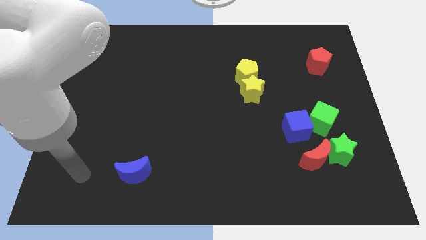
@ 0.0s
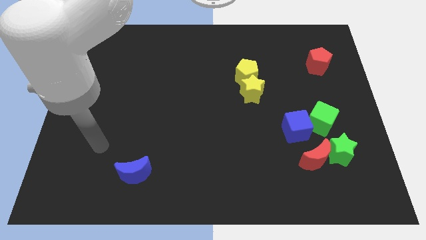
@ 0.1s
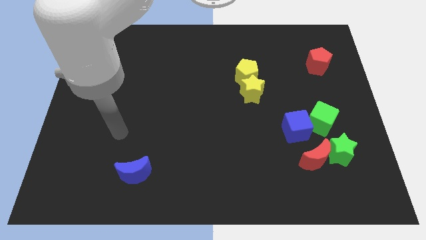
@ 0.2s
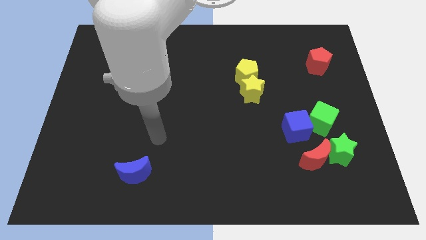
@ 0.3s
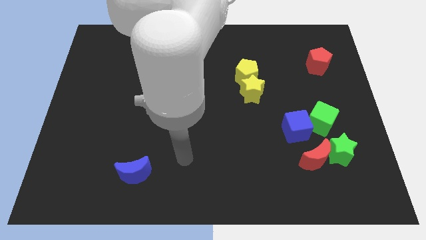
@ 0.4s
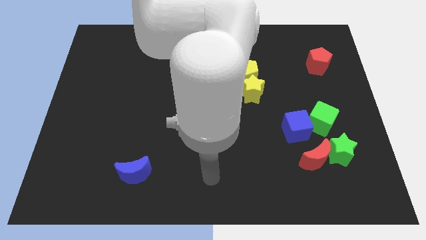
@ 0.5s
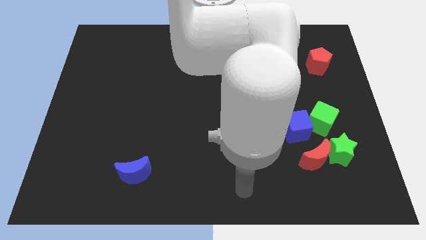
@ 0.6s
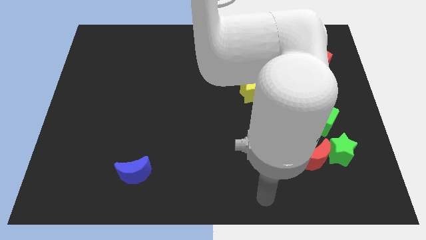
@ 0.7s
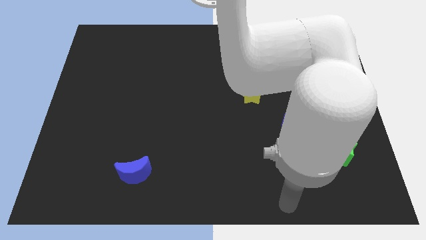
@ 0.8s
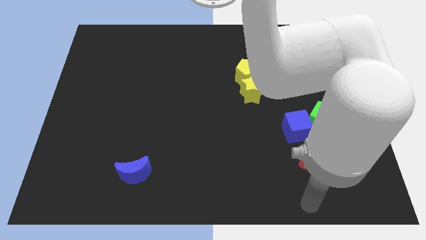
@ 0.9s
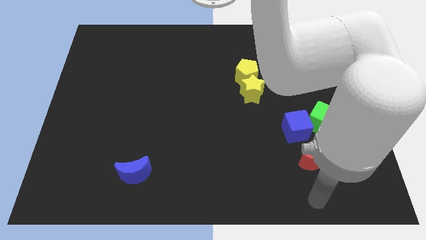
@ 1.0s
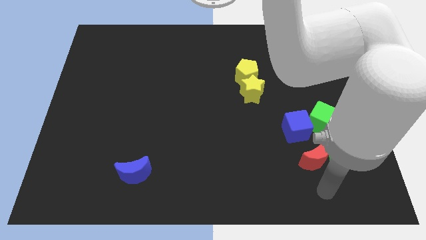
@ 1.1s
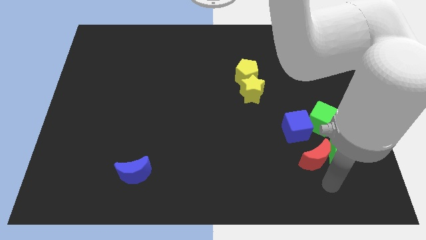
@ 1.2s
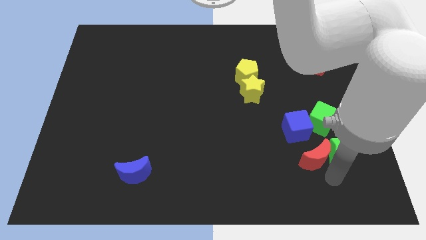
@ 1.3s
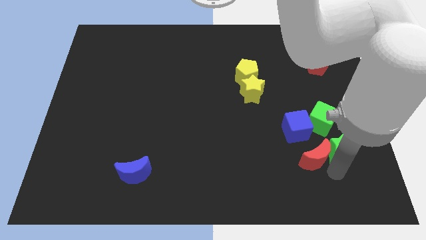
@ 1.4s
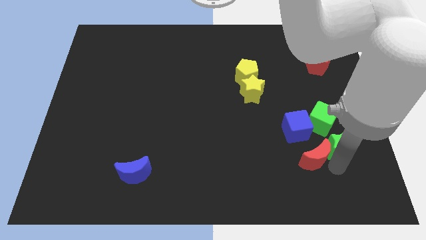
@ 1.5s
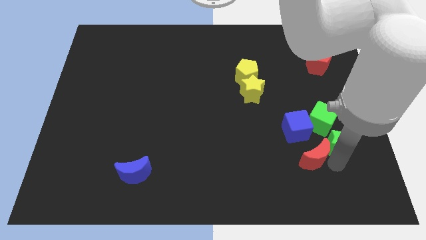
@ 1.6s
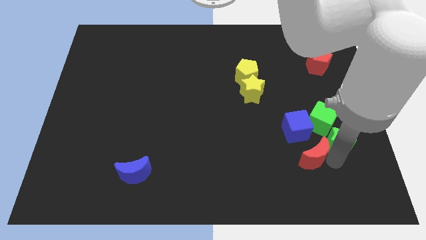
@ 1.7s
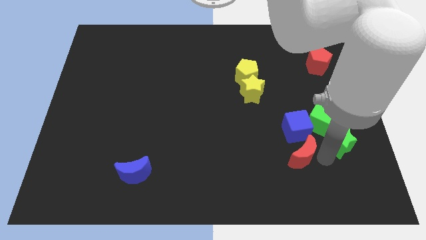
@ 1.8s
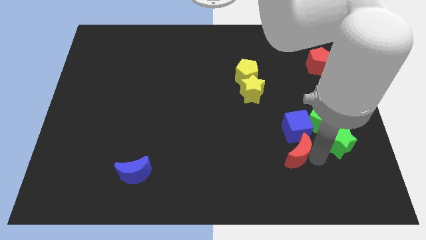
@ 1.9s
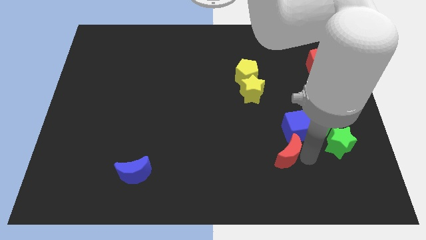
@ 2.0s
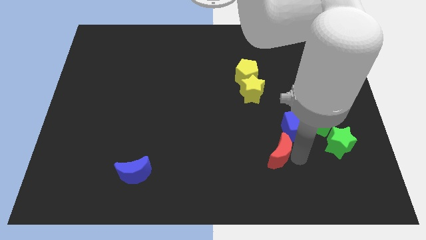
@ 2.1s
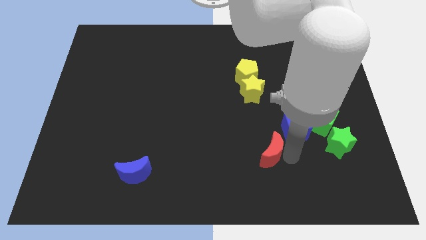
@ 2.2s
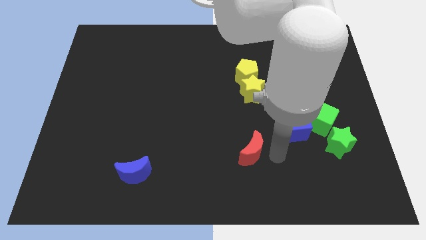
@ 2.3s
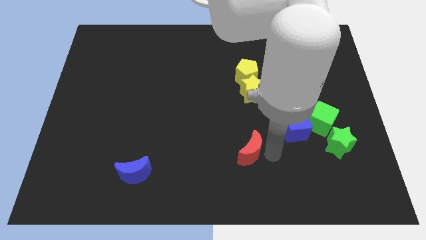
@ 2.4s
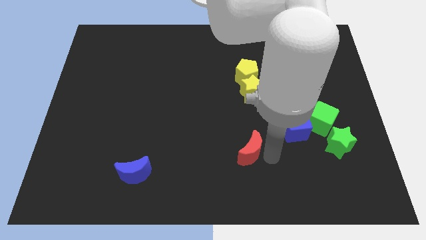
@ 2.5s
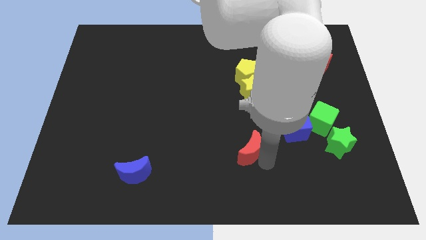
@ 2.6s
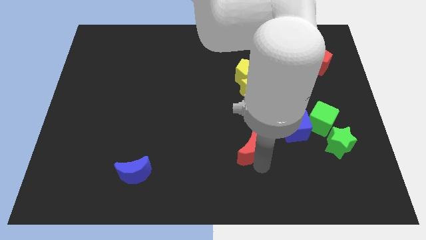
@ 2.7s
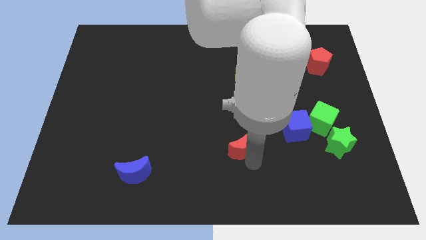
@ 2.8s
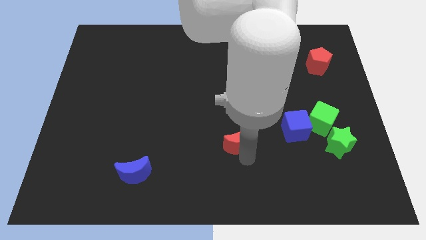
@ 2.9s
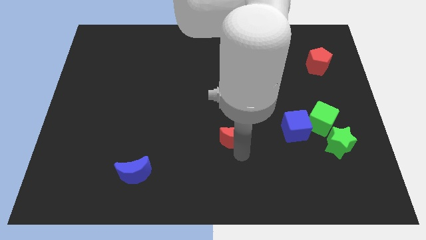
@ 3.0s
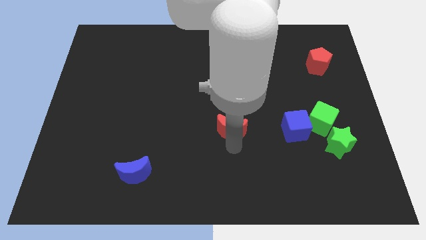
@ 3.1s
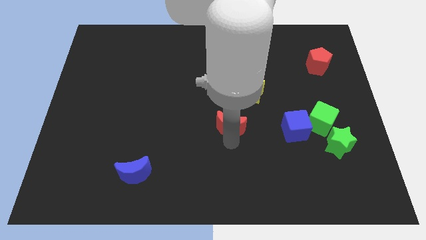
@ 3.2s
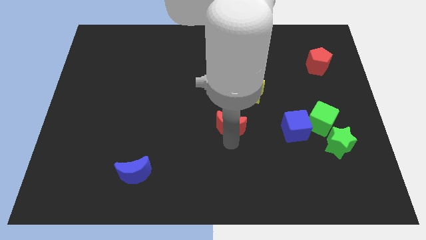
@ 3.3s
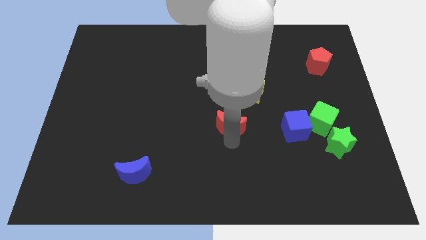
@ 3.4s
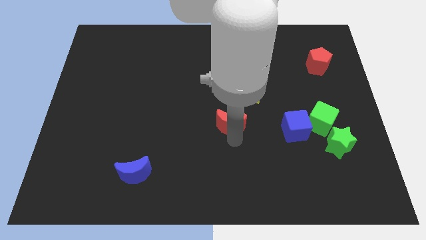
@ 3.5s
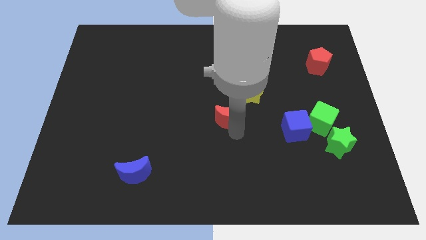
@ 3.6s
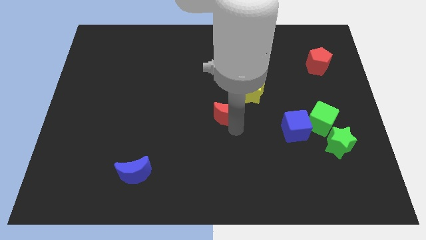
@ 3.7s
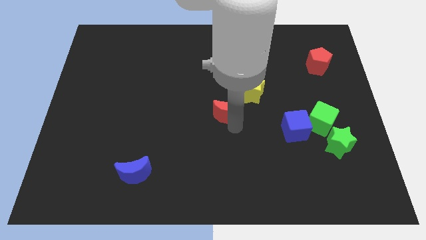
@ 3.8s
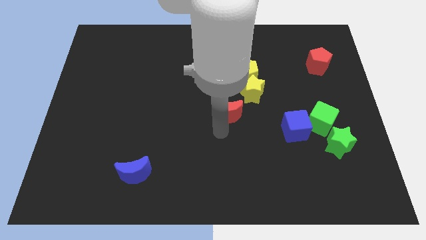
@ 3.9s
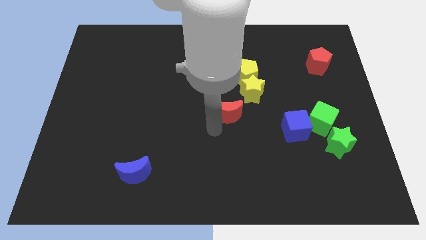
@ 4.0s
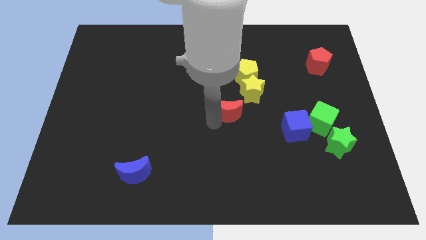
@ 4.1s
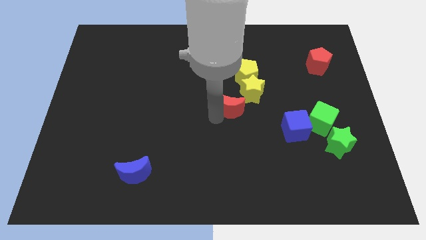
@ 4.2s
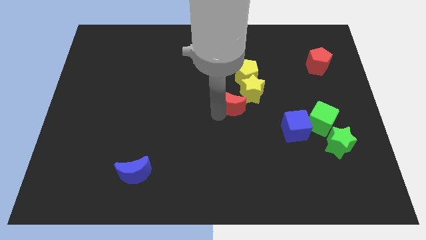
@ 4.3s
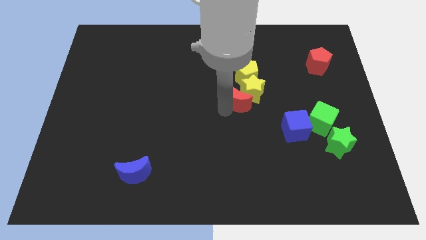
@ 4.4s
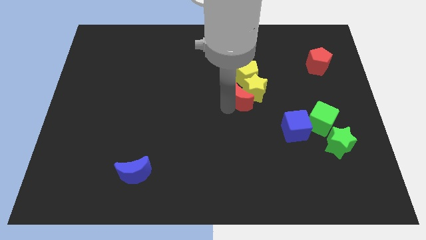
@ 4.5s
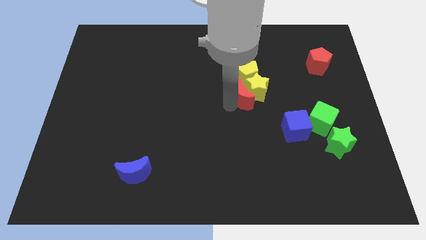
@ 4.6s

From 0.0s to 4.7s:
move the red moon towards the yellow star

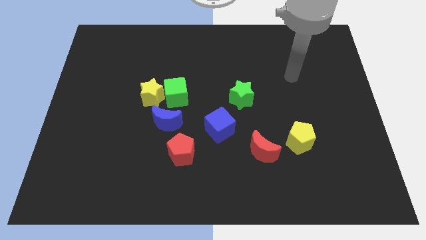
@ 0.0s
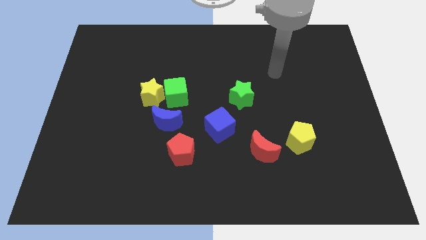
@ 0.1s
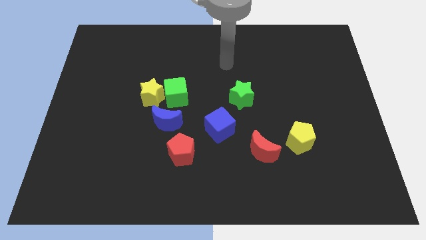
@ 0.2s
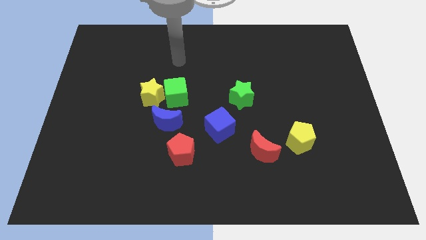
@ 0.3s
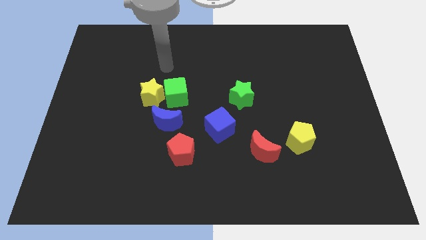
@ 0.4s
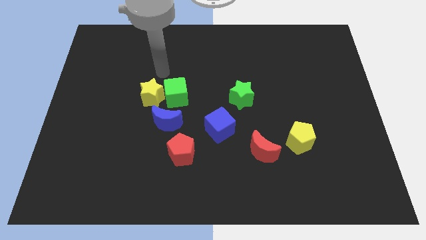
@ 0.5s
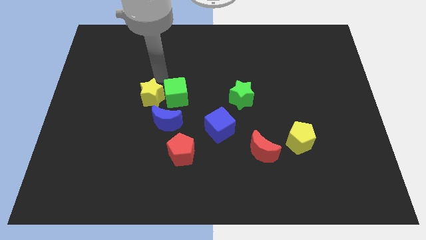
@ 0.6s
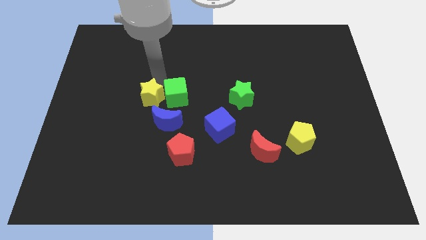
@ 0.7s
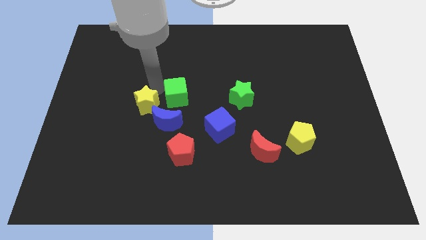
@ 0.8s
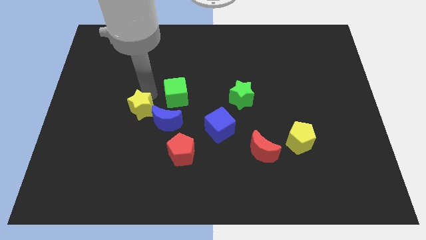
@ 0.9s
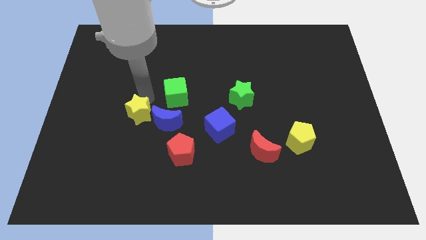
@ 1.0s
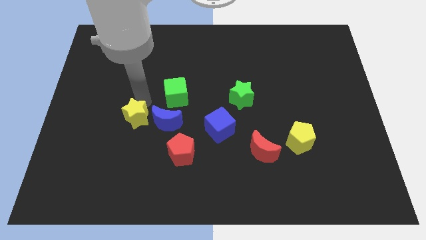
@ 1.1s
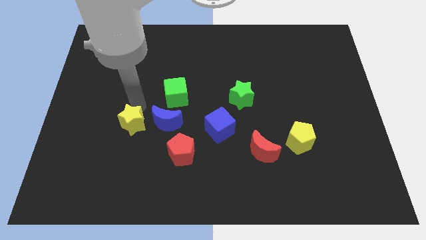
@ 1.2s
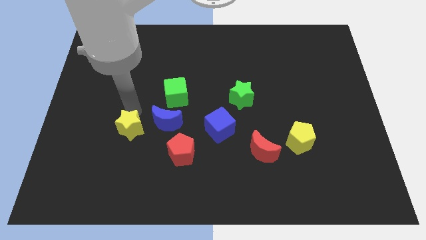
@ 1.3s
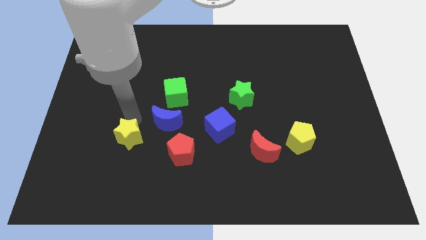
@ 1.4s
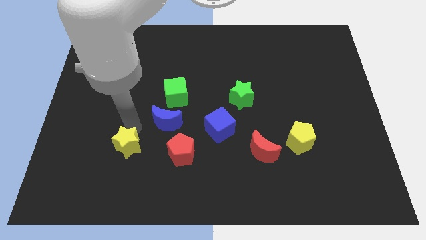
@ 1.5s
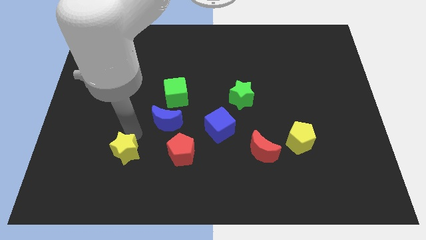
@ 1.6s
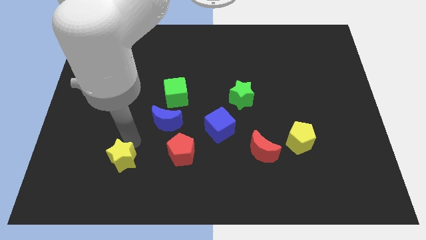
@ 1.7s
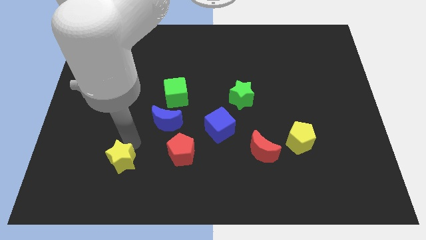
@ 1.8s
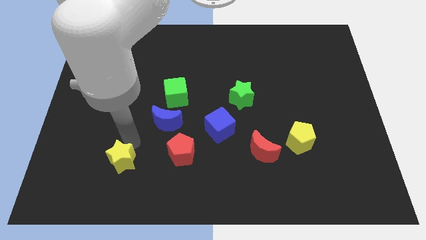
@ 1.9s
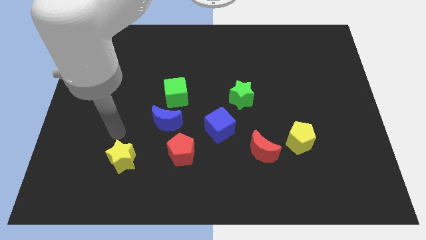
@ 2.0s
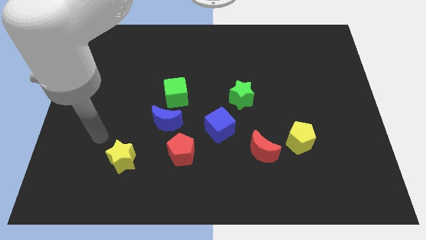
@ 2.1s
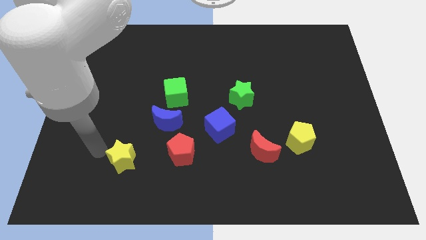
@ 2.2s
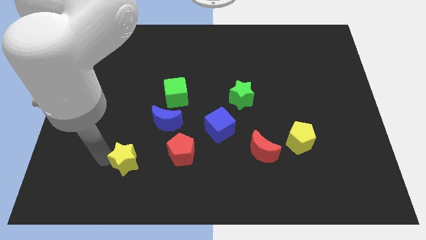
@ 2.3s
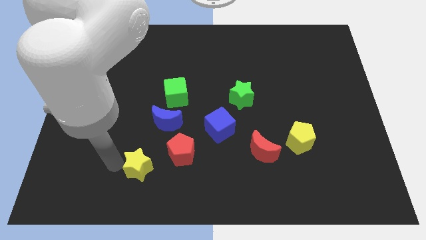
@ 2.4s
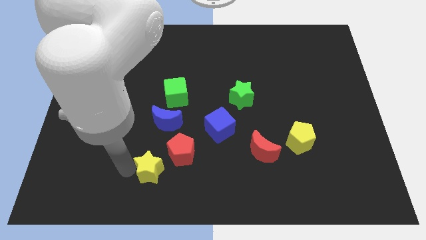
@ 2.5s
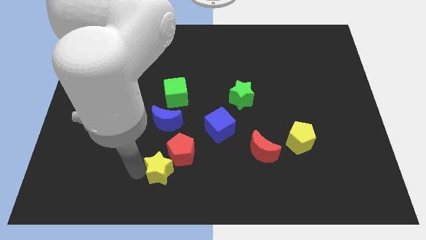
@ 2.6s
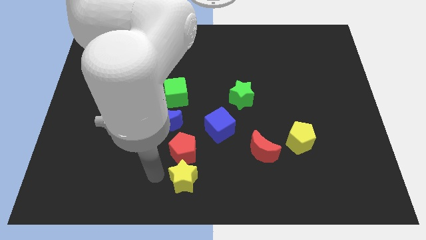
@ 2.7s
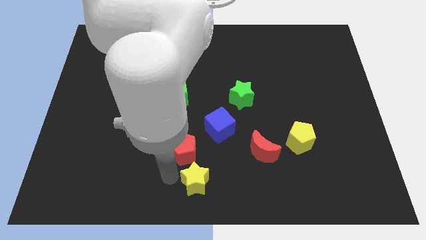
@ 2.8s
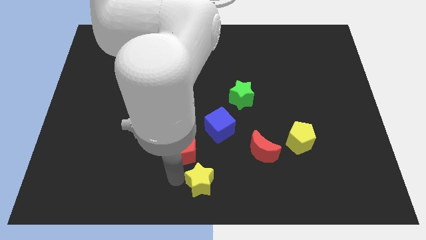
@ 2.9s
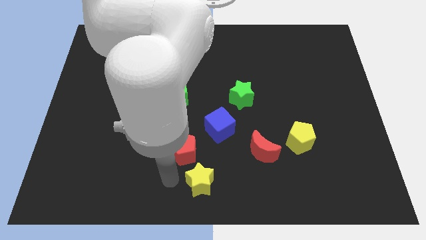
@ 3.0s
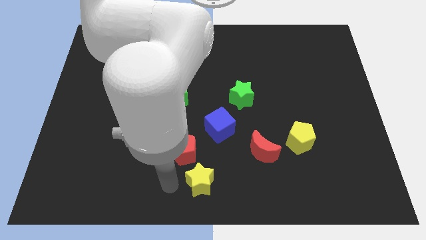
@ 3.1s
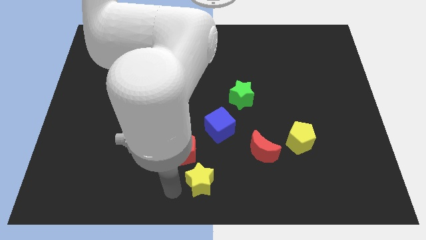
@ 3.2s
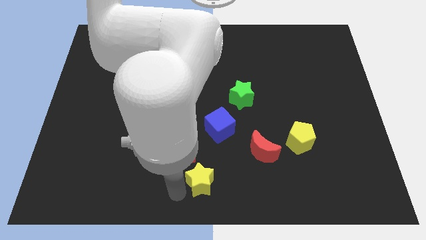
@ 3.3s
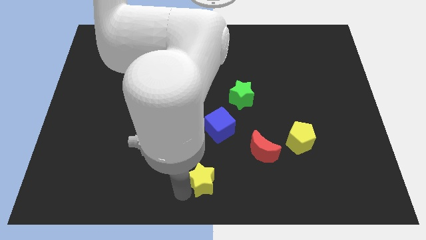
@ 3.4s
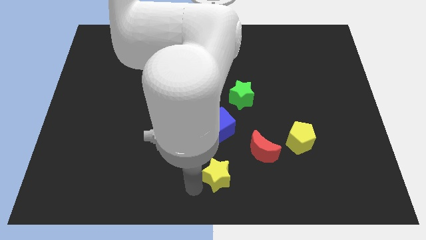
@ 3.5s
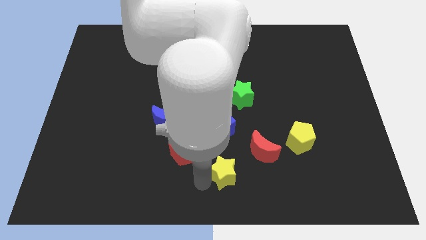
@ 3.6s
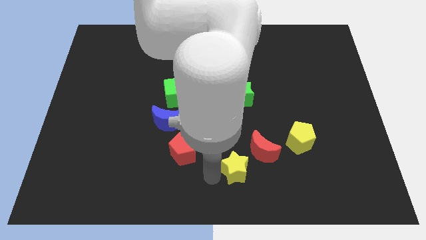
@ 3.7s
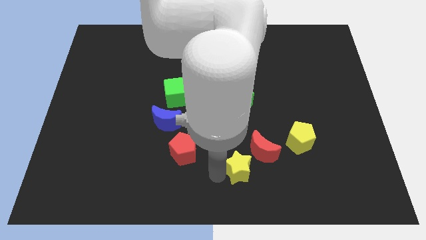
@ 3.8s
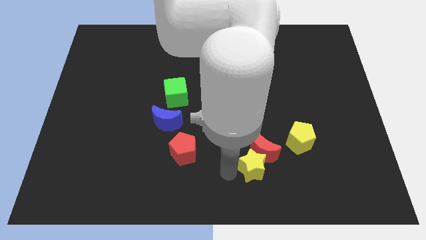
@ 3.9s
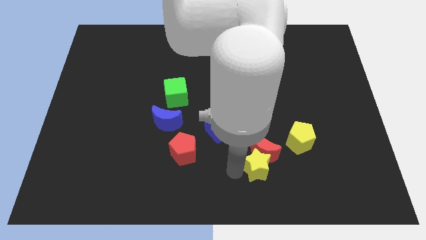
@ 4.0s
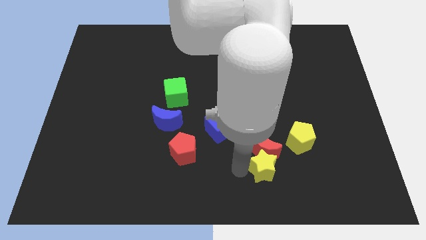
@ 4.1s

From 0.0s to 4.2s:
slide the yellow star towards the red moon
